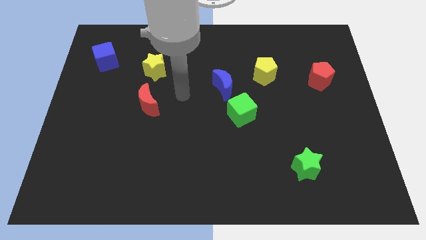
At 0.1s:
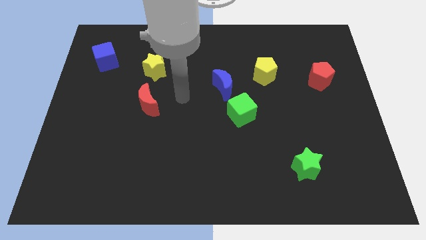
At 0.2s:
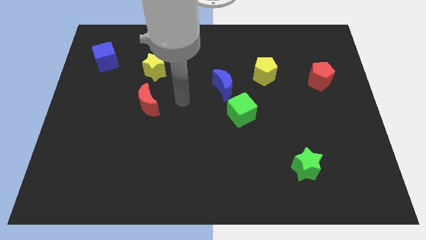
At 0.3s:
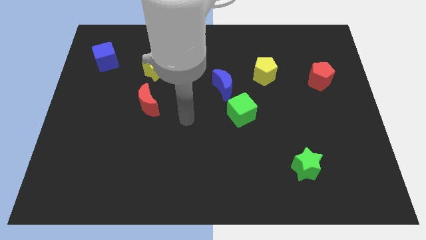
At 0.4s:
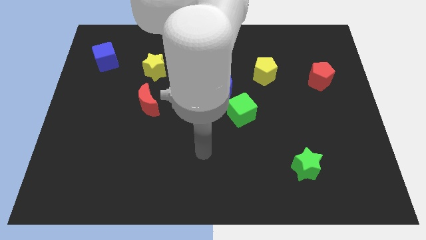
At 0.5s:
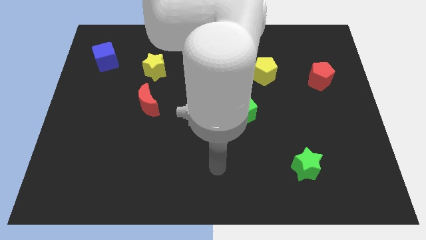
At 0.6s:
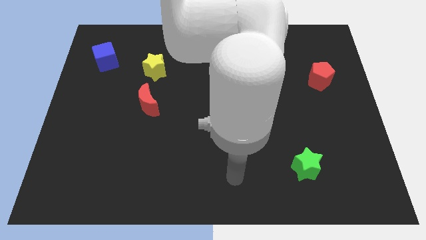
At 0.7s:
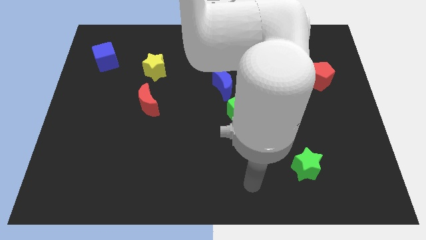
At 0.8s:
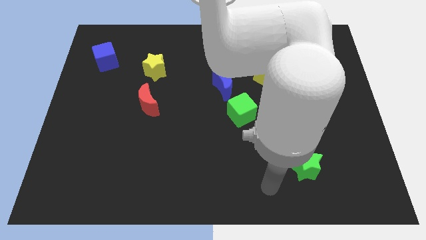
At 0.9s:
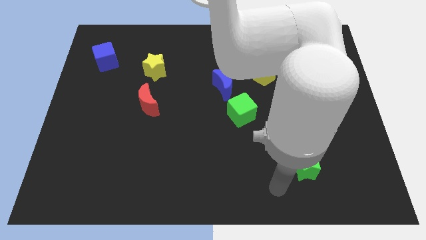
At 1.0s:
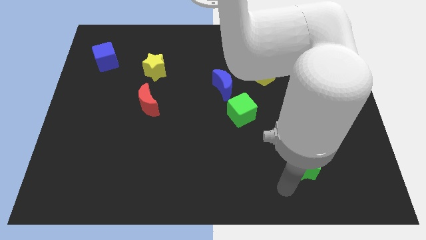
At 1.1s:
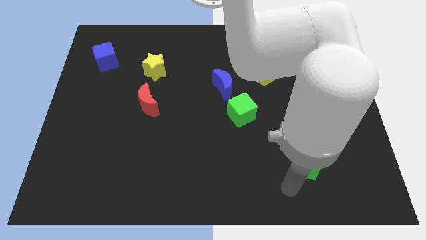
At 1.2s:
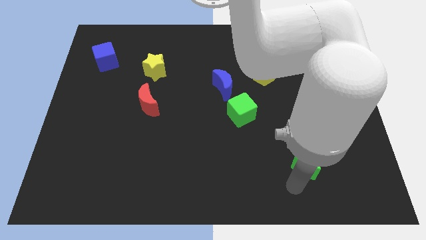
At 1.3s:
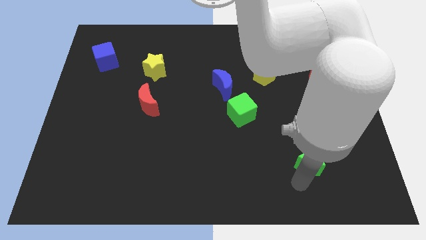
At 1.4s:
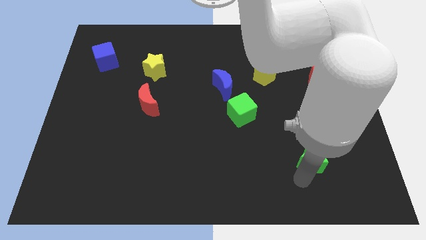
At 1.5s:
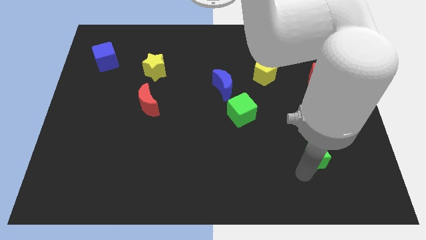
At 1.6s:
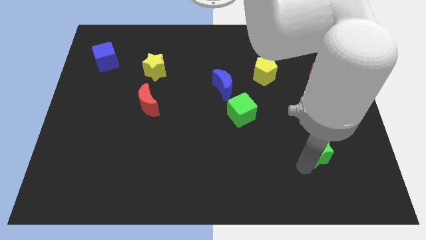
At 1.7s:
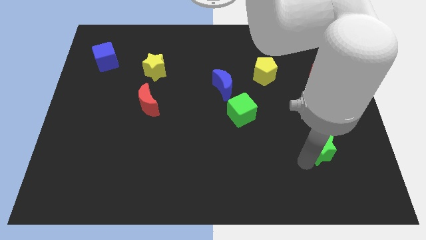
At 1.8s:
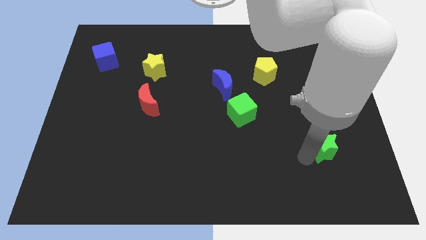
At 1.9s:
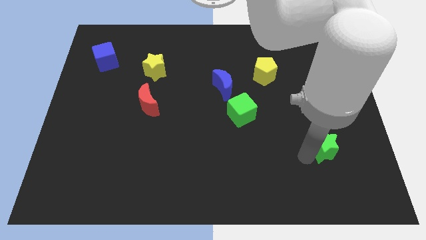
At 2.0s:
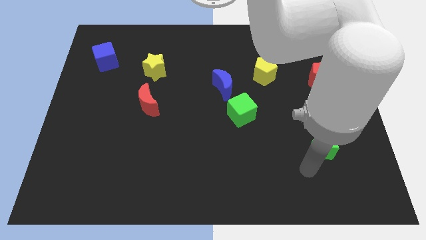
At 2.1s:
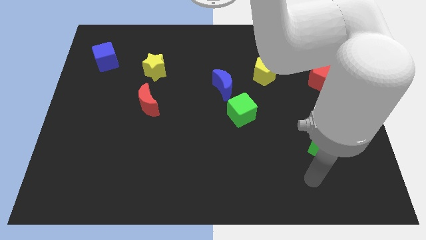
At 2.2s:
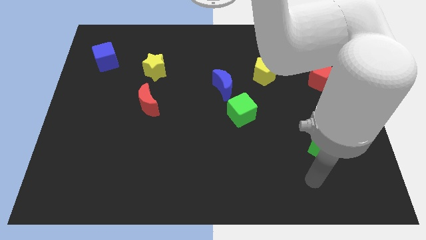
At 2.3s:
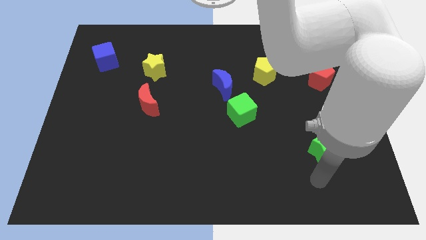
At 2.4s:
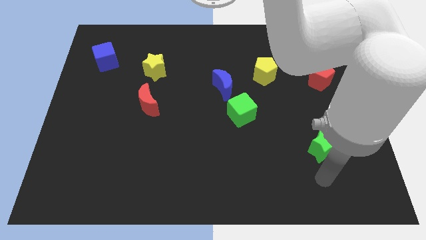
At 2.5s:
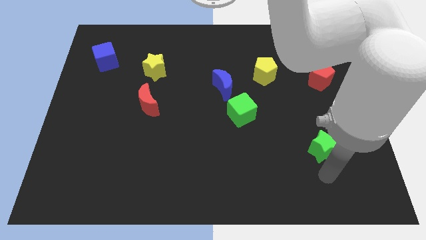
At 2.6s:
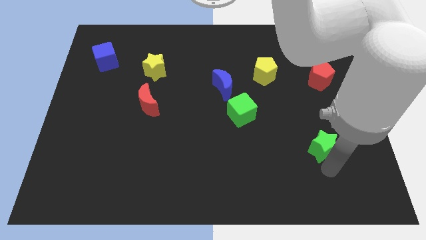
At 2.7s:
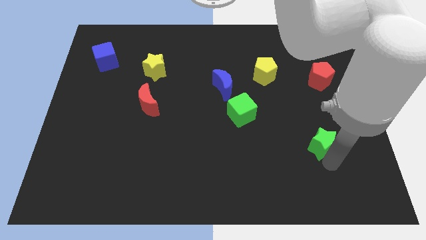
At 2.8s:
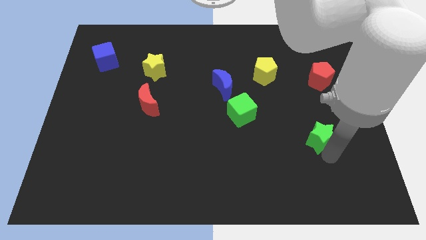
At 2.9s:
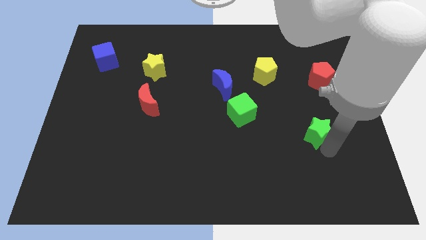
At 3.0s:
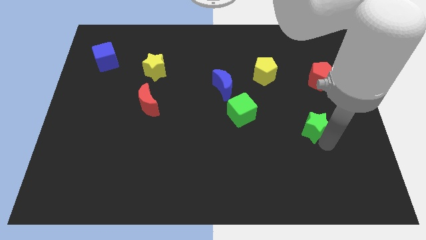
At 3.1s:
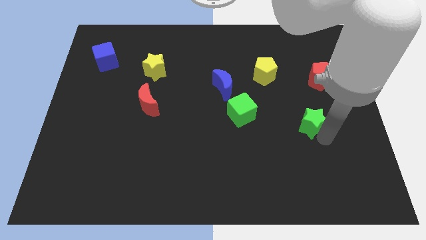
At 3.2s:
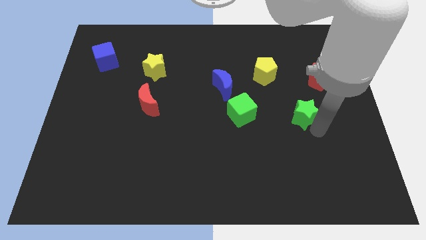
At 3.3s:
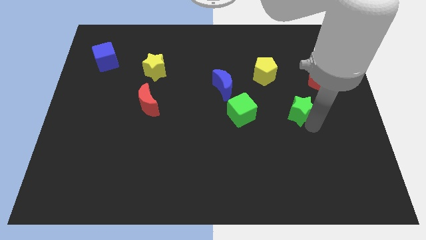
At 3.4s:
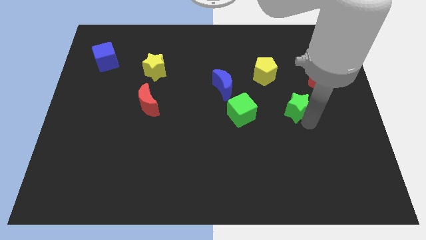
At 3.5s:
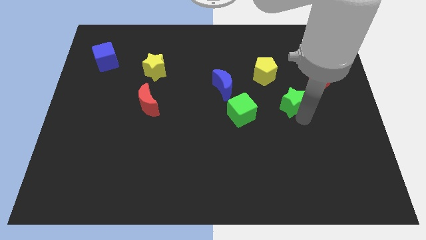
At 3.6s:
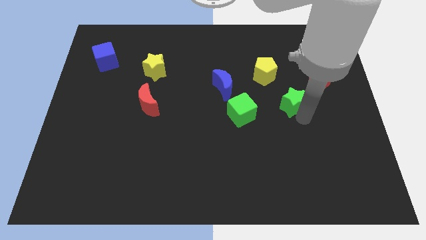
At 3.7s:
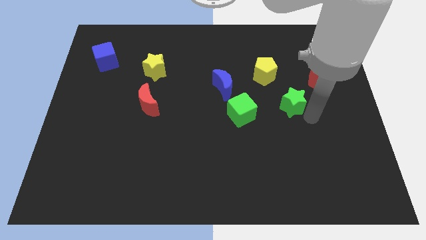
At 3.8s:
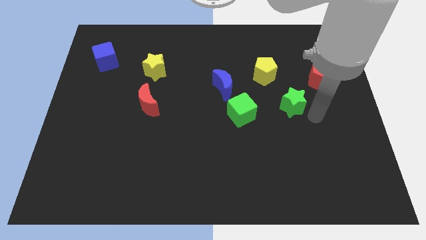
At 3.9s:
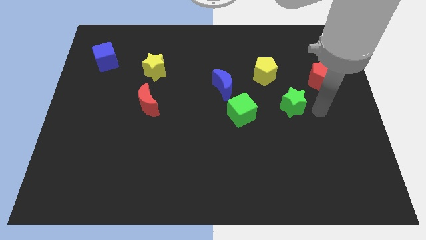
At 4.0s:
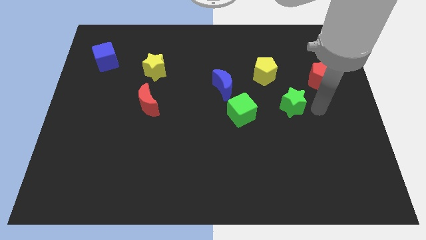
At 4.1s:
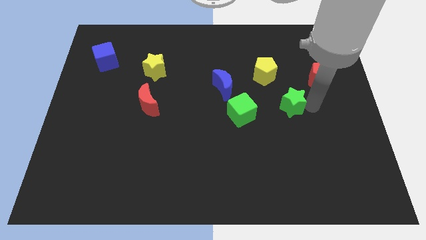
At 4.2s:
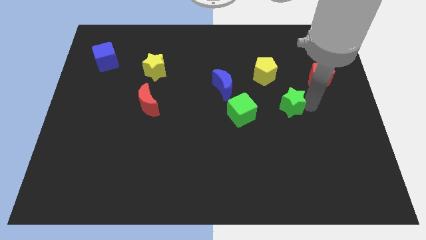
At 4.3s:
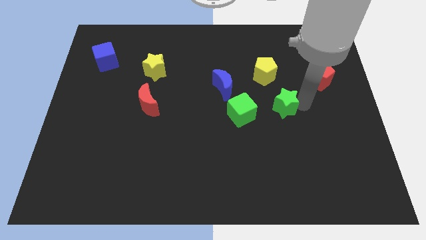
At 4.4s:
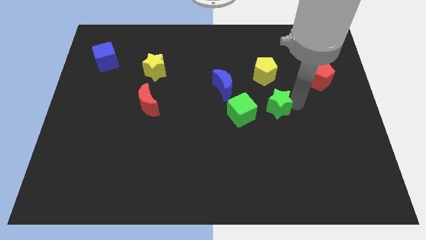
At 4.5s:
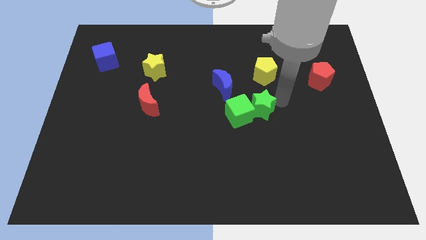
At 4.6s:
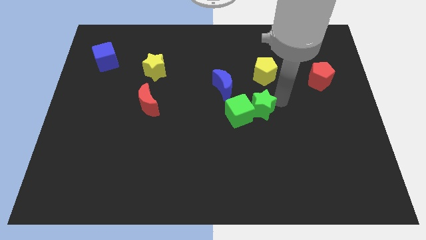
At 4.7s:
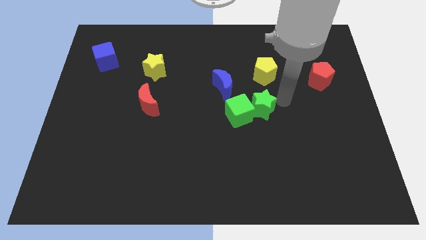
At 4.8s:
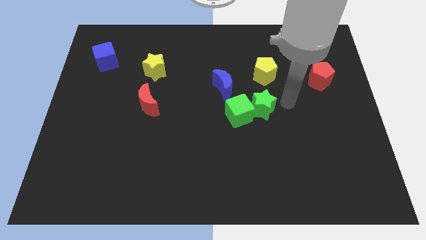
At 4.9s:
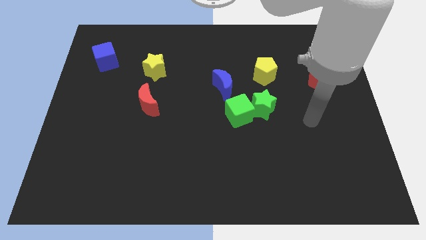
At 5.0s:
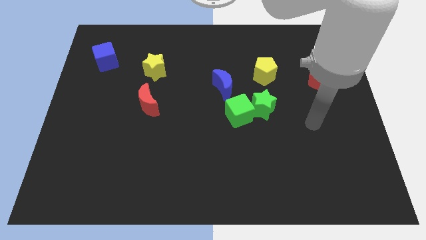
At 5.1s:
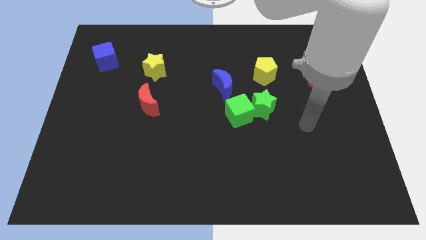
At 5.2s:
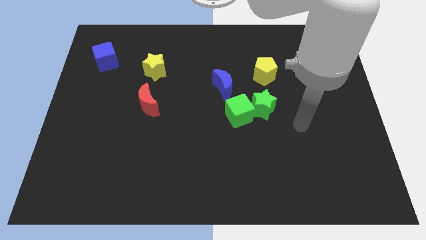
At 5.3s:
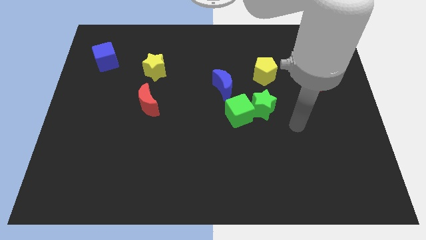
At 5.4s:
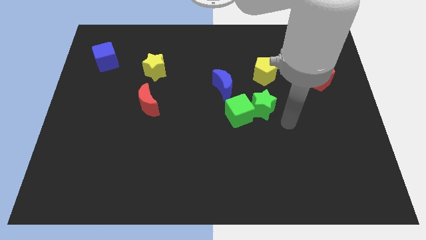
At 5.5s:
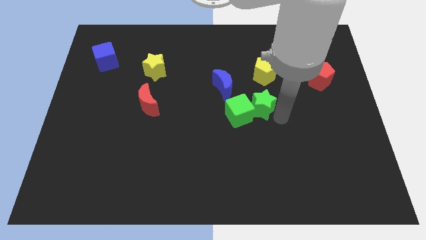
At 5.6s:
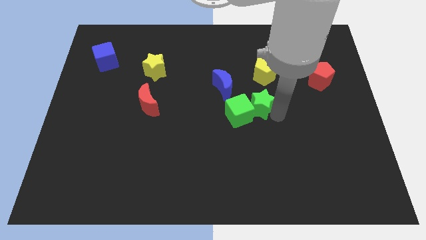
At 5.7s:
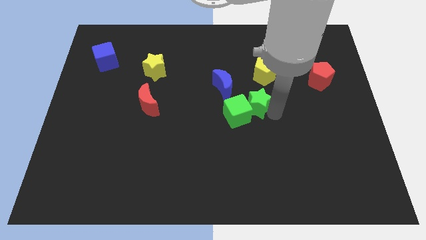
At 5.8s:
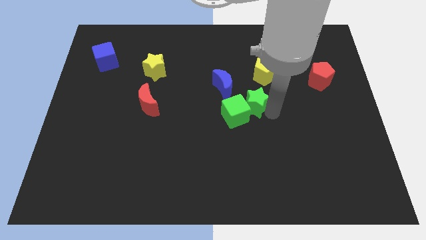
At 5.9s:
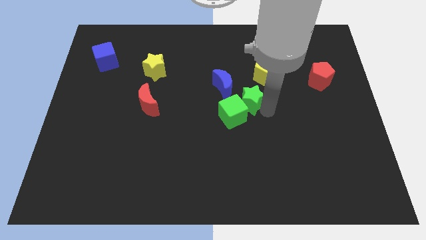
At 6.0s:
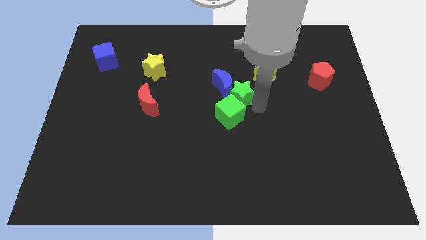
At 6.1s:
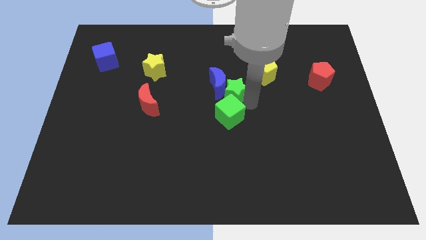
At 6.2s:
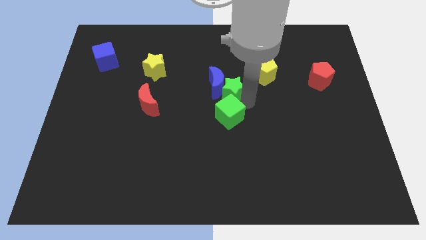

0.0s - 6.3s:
move the green star towards the blue moon

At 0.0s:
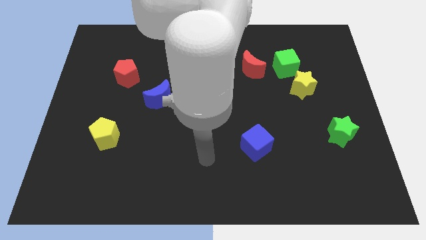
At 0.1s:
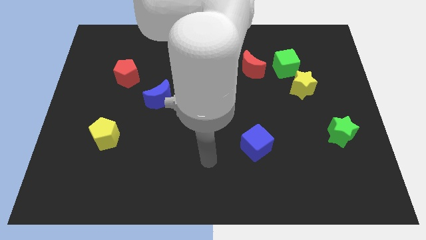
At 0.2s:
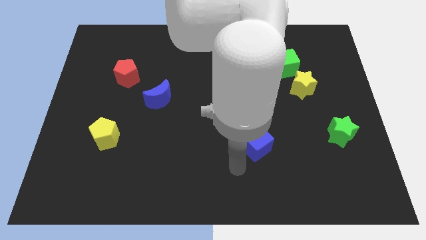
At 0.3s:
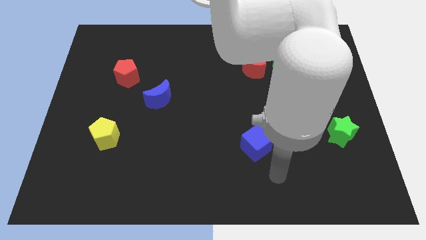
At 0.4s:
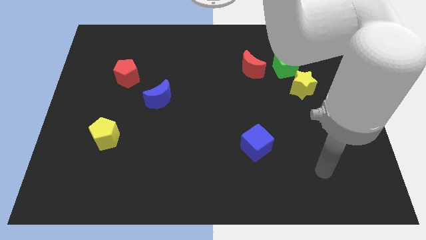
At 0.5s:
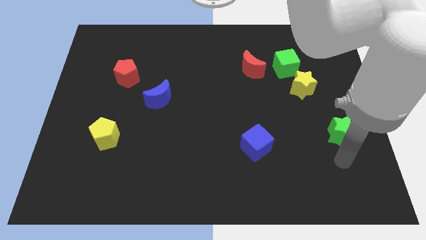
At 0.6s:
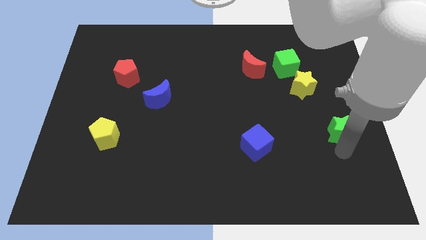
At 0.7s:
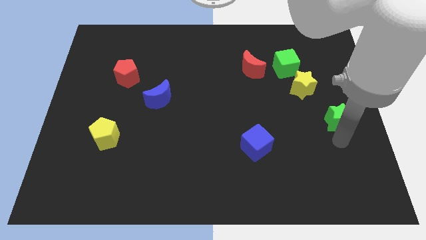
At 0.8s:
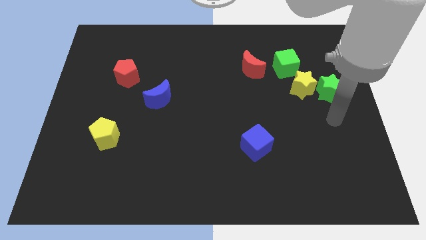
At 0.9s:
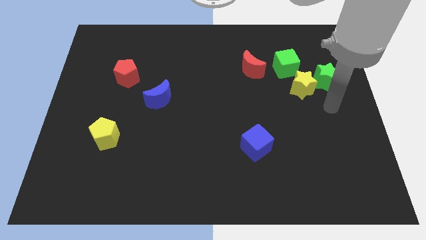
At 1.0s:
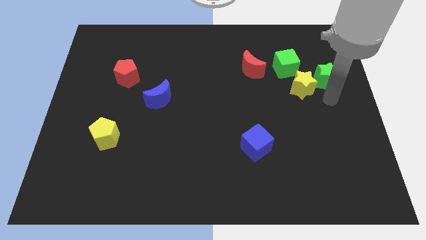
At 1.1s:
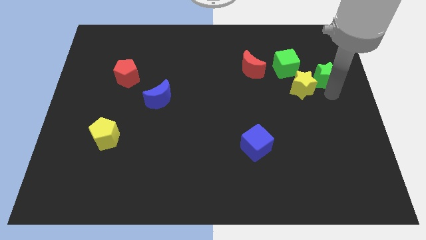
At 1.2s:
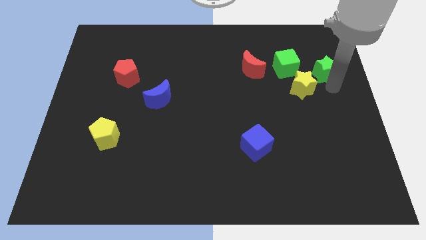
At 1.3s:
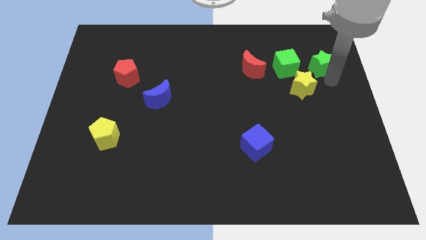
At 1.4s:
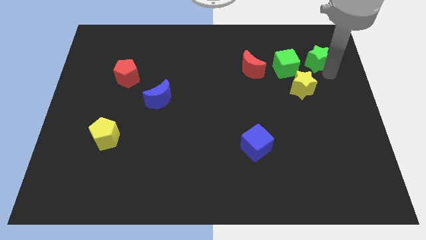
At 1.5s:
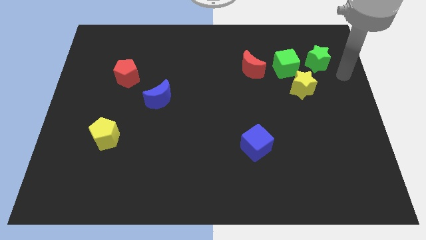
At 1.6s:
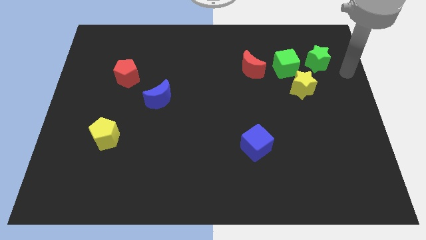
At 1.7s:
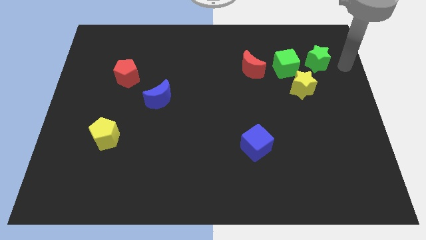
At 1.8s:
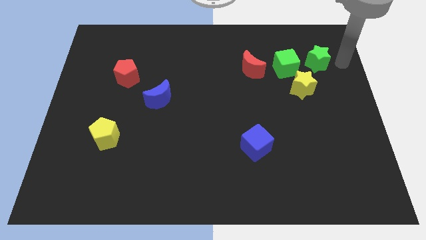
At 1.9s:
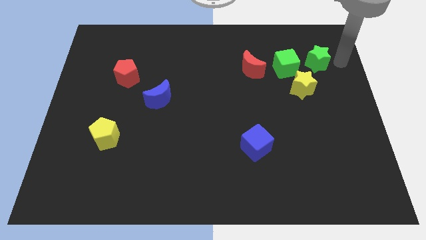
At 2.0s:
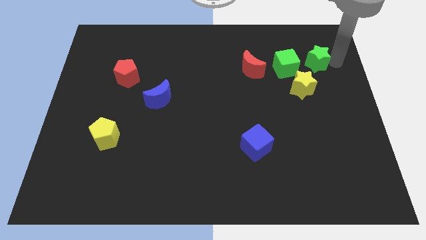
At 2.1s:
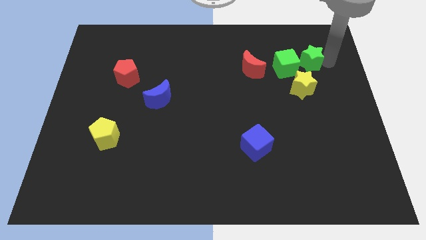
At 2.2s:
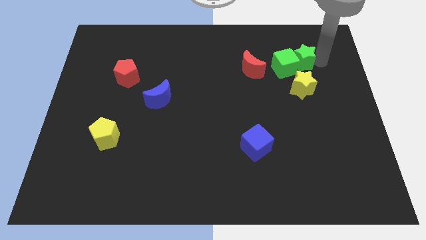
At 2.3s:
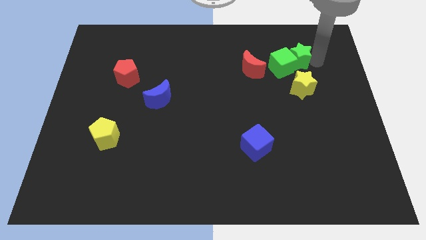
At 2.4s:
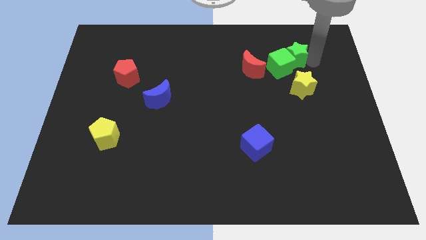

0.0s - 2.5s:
move the green star to the green cube
